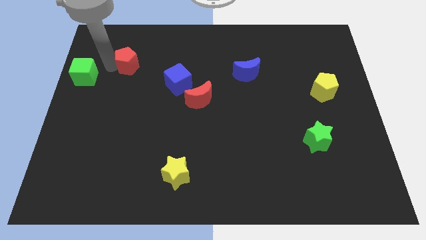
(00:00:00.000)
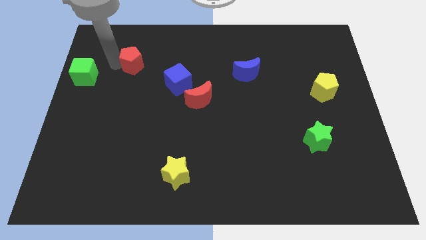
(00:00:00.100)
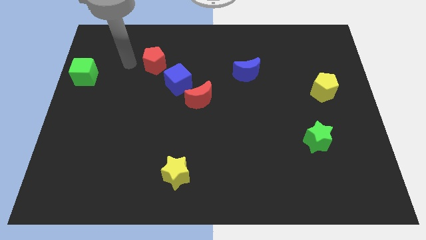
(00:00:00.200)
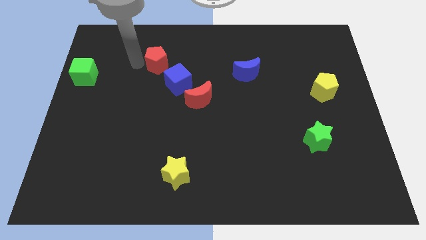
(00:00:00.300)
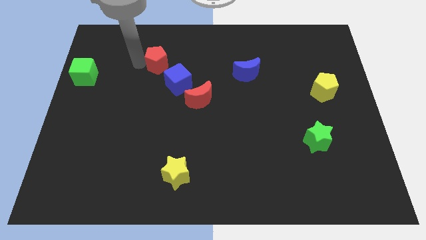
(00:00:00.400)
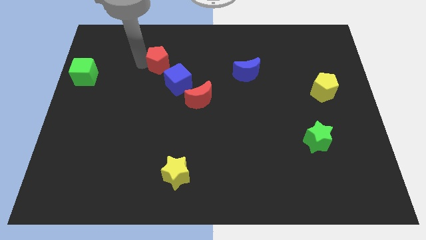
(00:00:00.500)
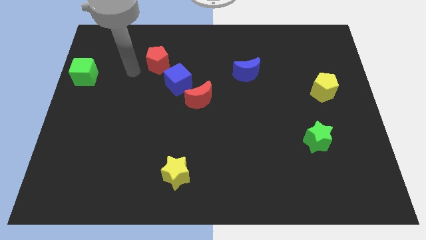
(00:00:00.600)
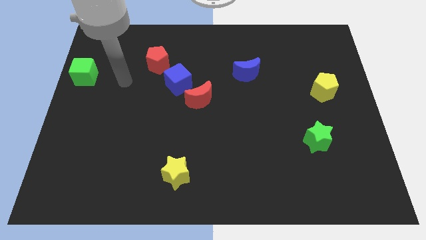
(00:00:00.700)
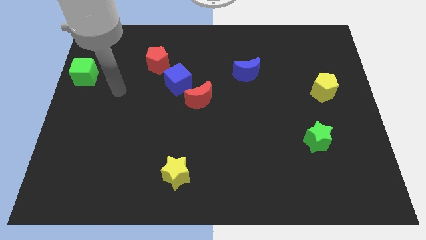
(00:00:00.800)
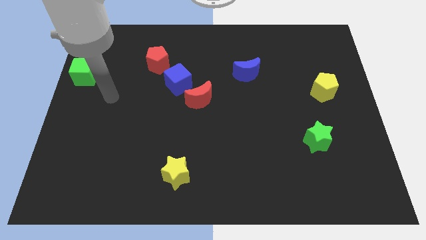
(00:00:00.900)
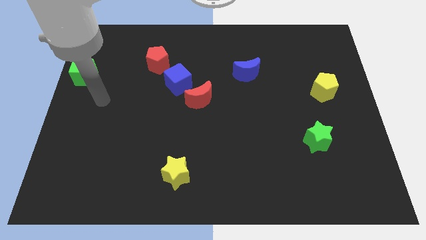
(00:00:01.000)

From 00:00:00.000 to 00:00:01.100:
move the red pentagon to the top left side of the blue cube

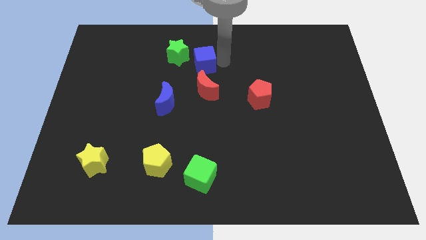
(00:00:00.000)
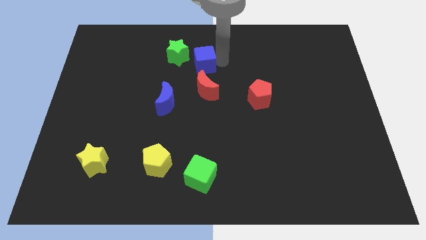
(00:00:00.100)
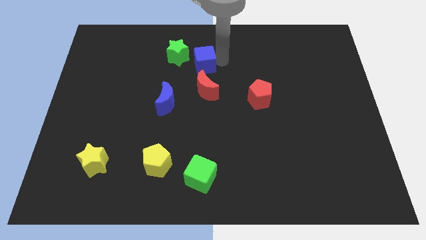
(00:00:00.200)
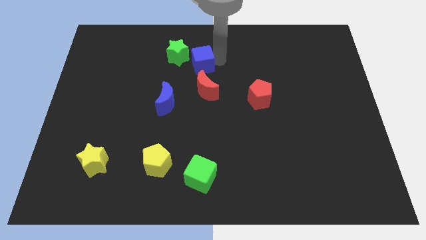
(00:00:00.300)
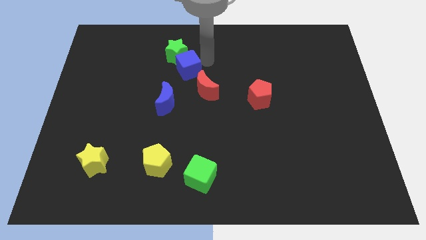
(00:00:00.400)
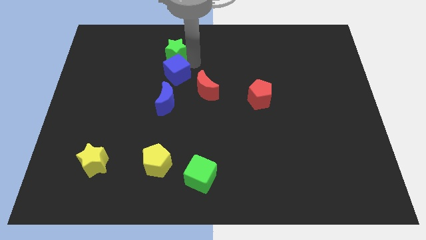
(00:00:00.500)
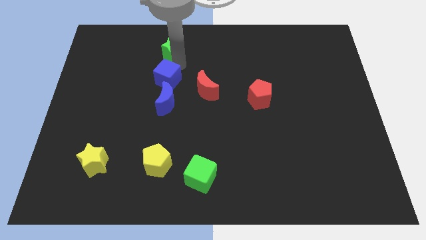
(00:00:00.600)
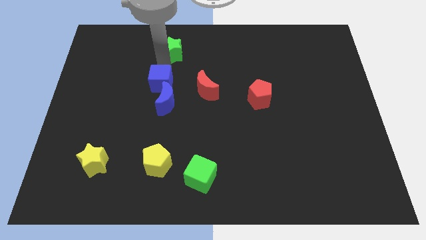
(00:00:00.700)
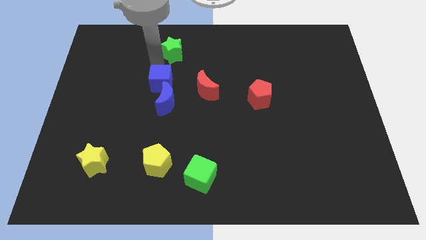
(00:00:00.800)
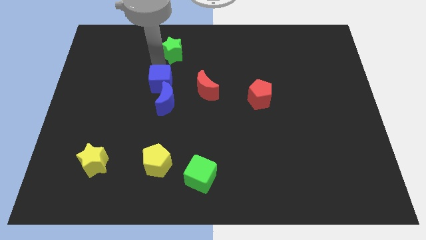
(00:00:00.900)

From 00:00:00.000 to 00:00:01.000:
move the blue cube to the top of the blue crescent

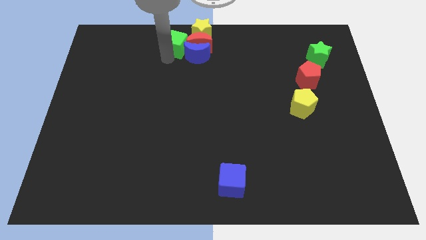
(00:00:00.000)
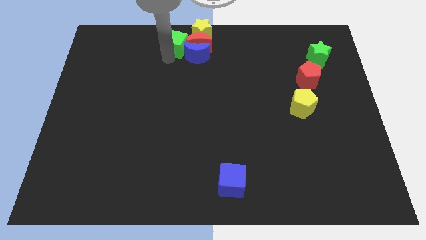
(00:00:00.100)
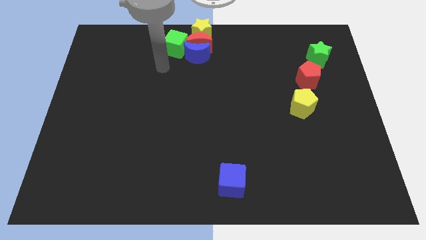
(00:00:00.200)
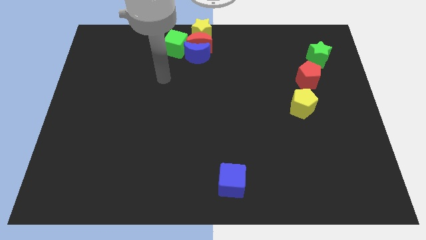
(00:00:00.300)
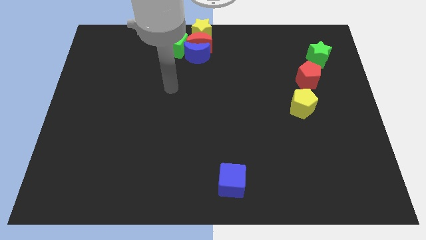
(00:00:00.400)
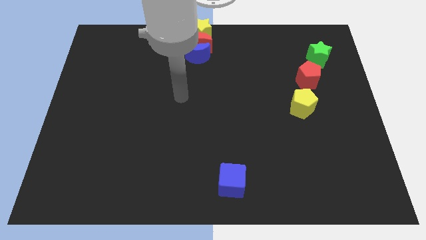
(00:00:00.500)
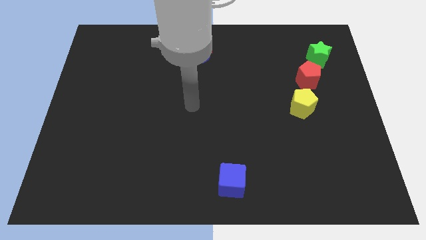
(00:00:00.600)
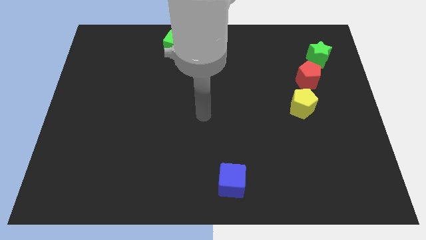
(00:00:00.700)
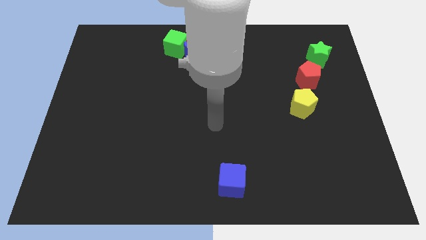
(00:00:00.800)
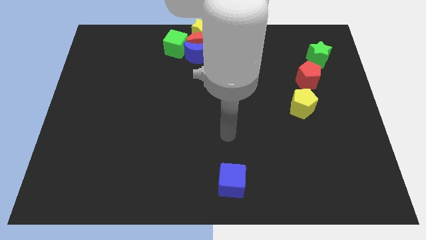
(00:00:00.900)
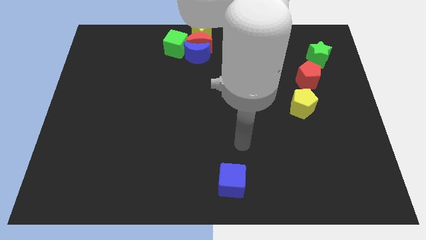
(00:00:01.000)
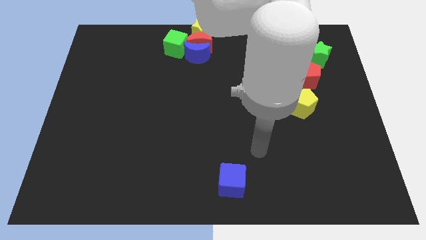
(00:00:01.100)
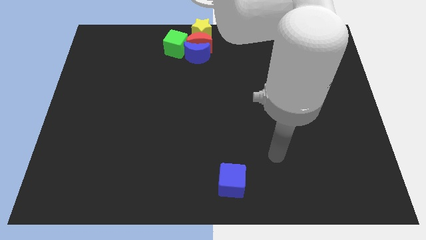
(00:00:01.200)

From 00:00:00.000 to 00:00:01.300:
move the arm away from the green cube

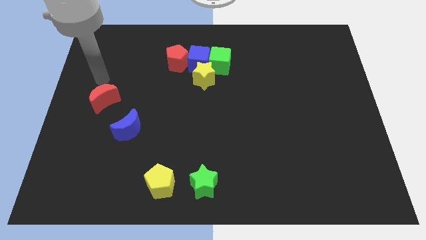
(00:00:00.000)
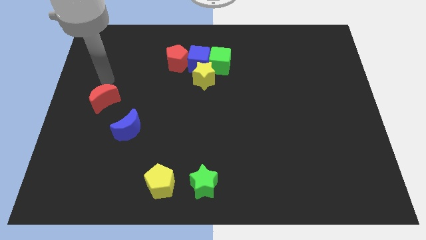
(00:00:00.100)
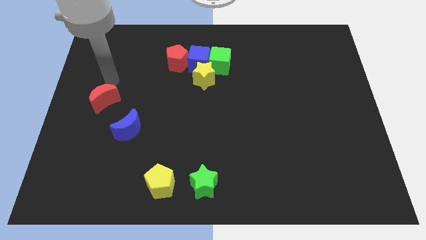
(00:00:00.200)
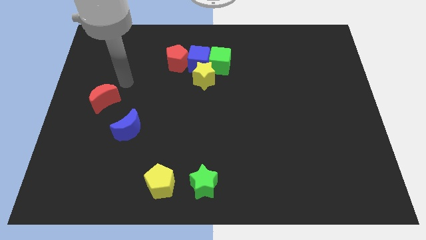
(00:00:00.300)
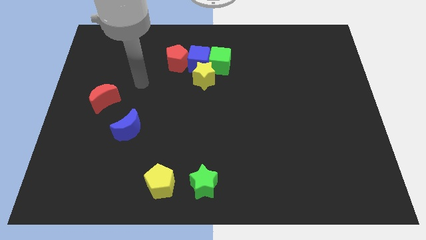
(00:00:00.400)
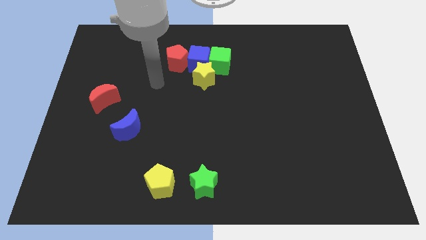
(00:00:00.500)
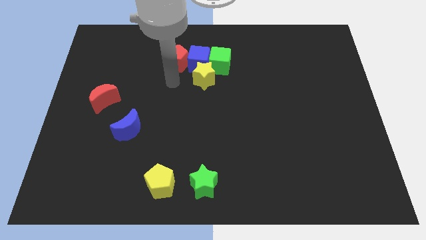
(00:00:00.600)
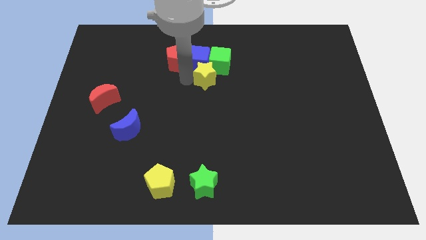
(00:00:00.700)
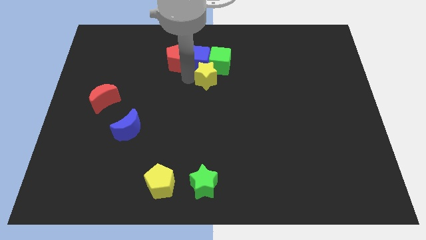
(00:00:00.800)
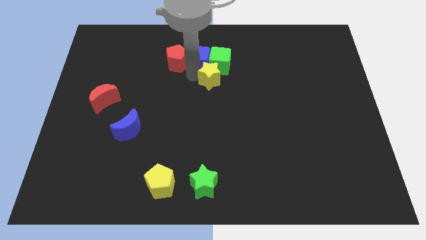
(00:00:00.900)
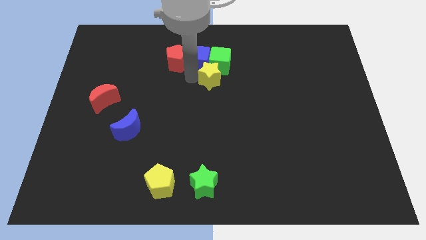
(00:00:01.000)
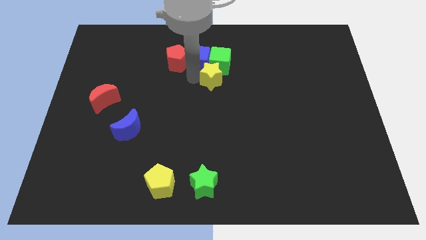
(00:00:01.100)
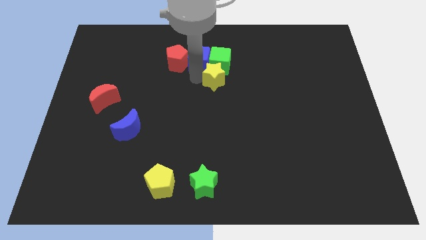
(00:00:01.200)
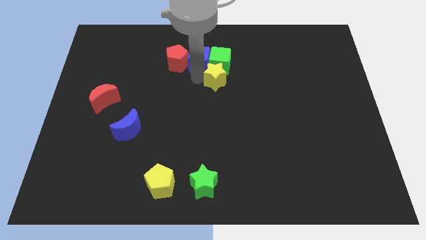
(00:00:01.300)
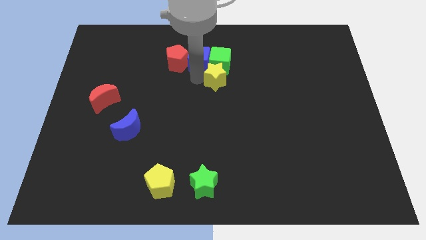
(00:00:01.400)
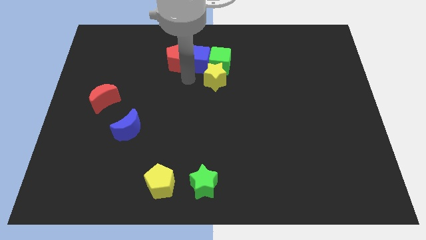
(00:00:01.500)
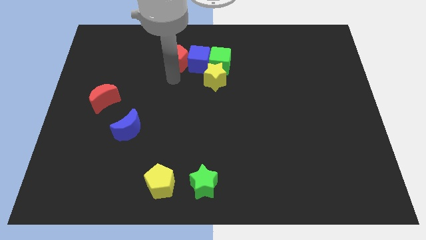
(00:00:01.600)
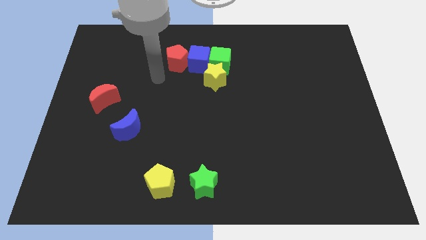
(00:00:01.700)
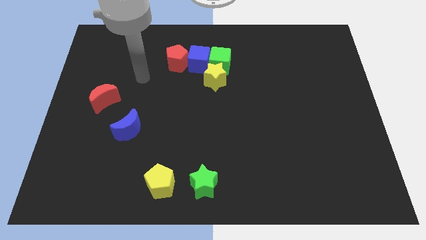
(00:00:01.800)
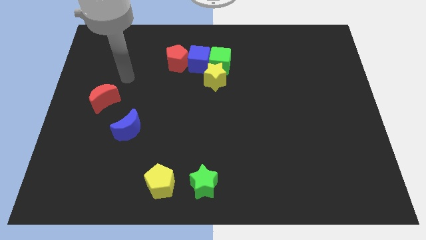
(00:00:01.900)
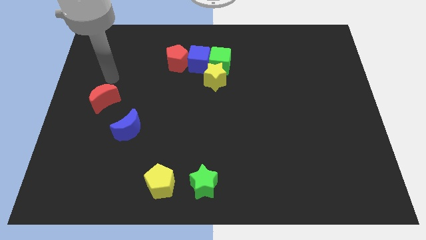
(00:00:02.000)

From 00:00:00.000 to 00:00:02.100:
place the yellow star towards the bottom of the green cube

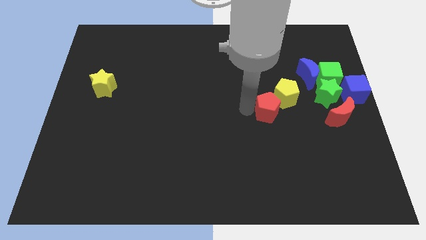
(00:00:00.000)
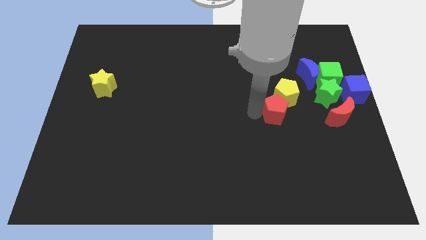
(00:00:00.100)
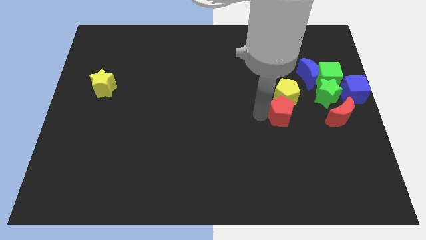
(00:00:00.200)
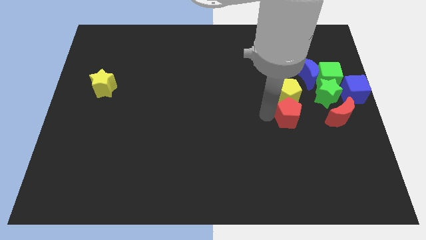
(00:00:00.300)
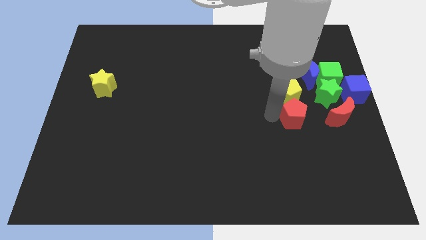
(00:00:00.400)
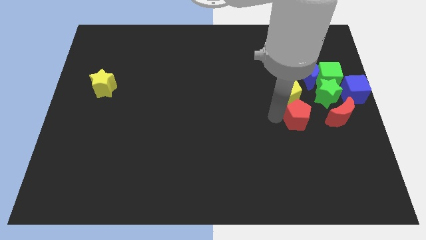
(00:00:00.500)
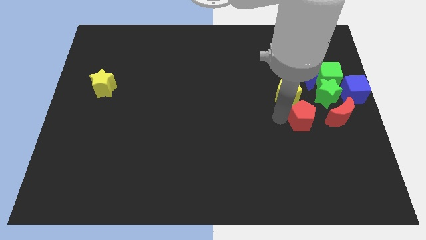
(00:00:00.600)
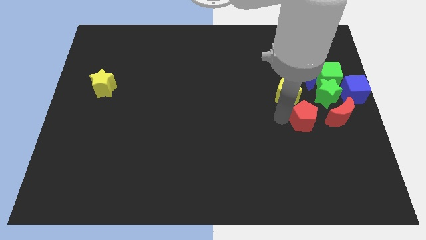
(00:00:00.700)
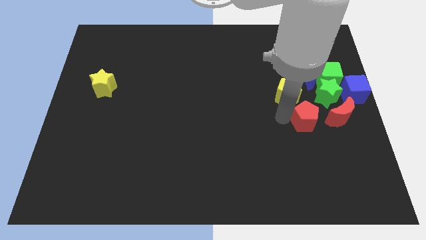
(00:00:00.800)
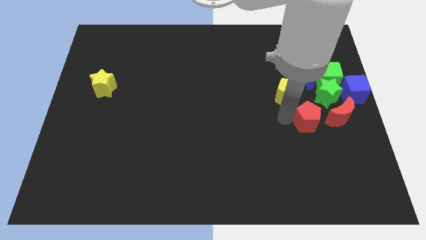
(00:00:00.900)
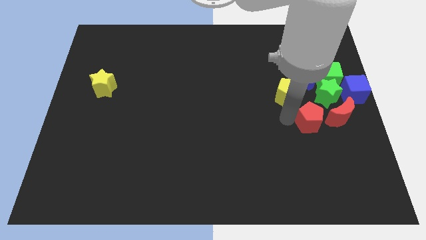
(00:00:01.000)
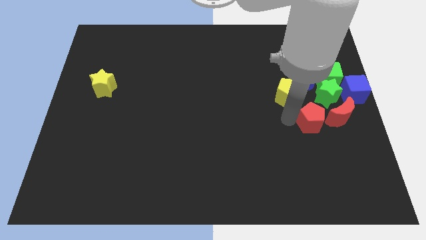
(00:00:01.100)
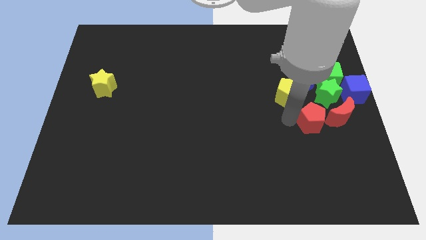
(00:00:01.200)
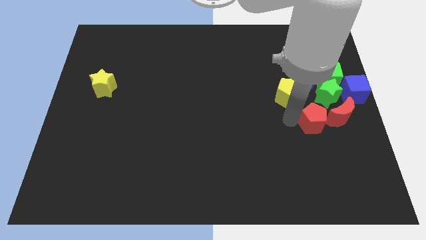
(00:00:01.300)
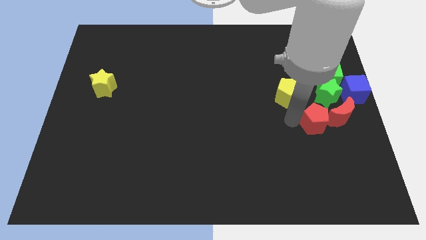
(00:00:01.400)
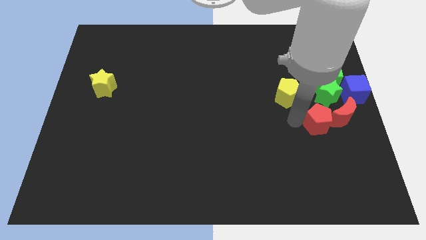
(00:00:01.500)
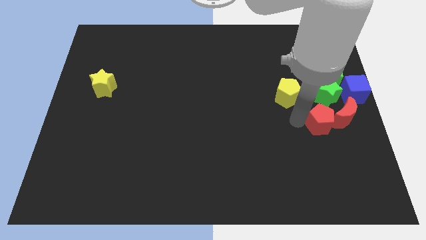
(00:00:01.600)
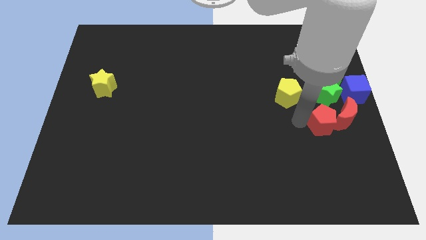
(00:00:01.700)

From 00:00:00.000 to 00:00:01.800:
place the red pentagon to the left of the red crescent

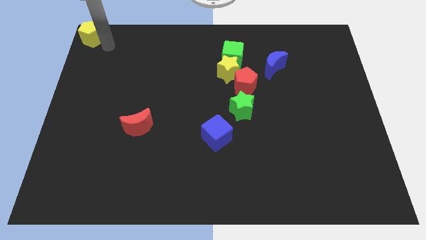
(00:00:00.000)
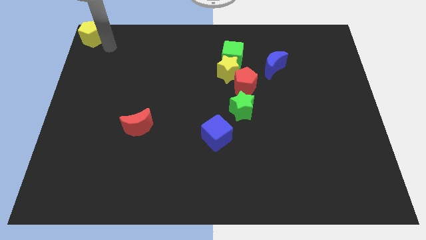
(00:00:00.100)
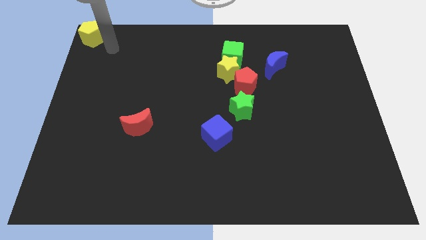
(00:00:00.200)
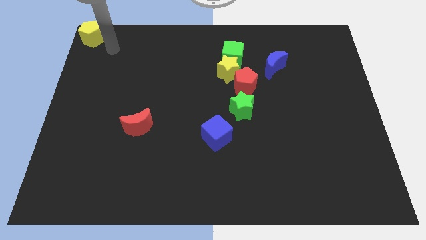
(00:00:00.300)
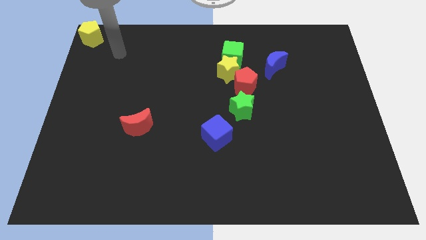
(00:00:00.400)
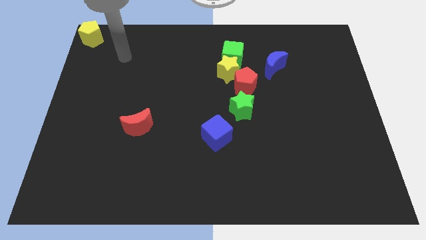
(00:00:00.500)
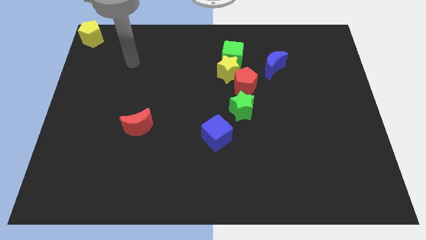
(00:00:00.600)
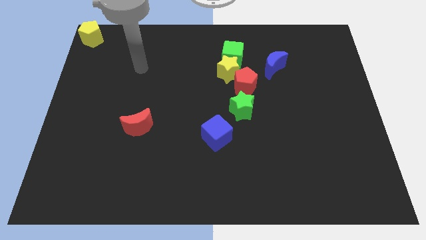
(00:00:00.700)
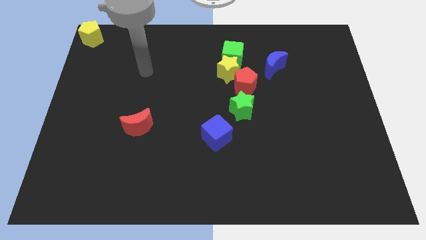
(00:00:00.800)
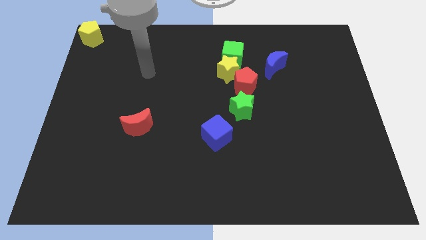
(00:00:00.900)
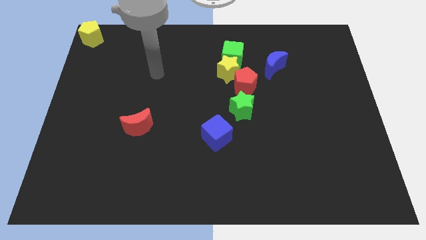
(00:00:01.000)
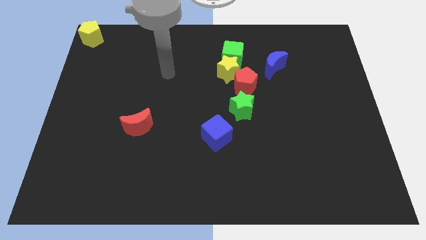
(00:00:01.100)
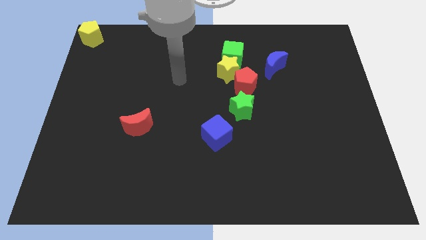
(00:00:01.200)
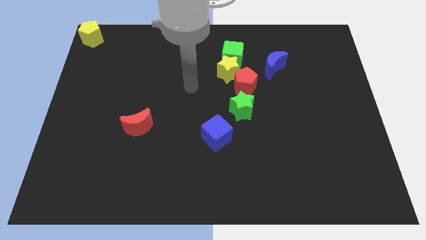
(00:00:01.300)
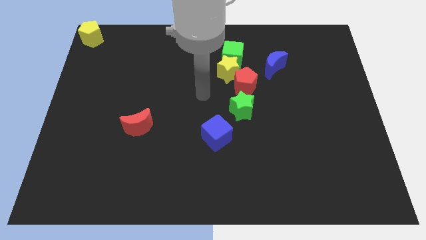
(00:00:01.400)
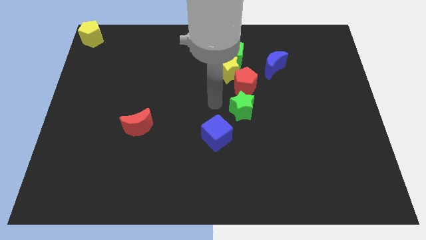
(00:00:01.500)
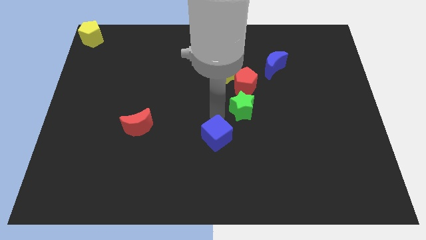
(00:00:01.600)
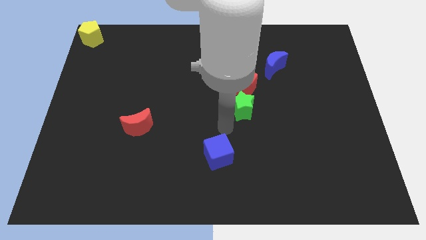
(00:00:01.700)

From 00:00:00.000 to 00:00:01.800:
place the arm above the blue cube
